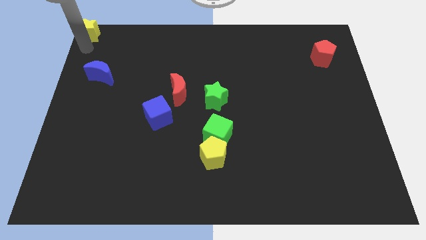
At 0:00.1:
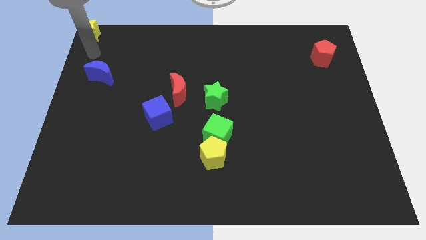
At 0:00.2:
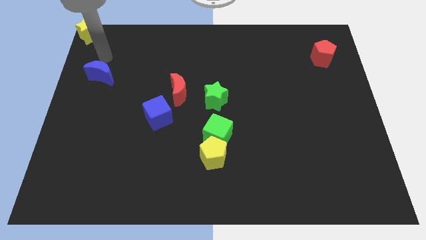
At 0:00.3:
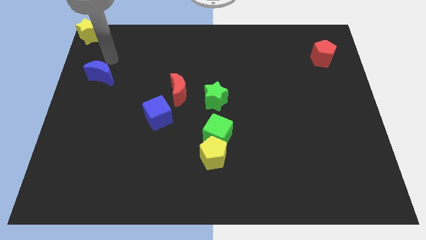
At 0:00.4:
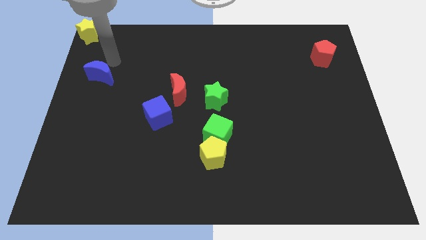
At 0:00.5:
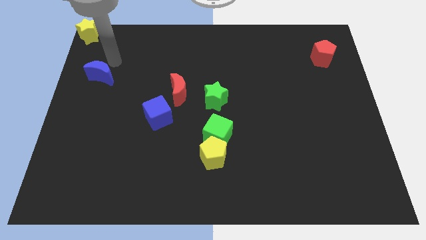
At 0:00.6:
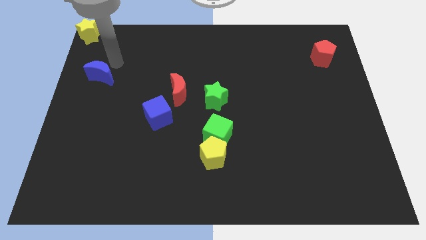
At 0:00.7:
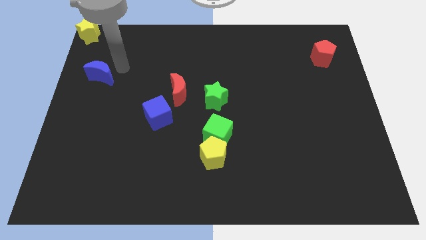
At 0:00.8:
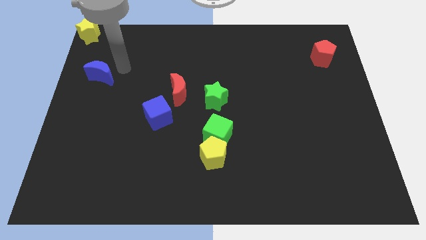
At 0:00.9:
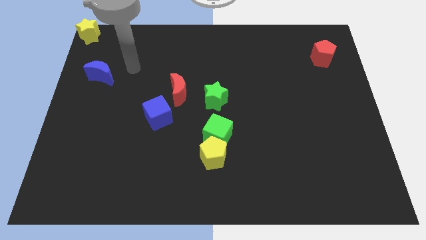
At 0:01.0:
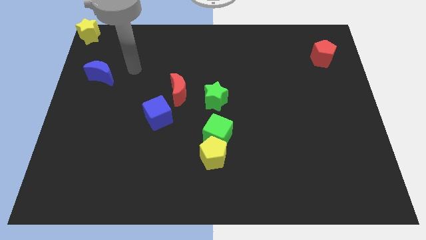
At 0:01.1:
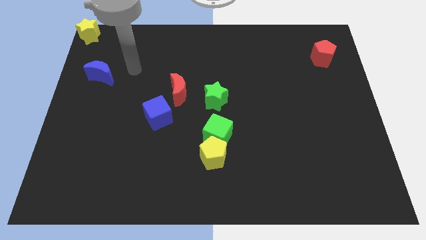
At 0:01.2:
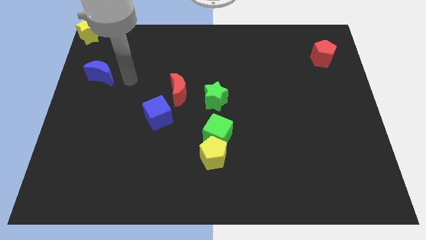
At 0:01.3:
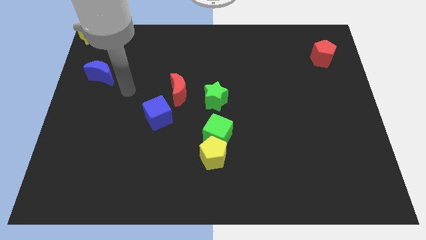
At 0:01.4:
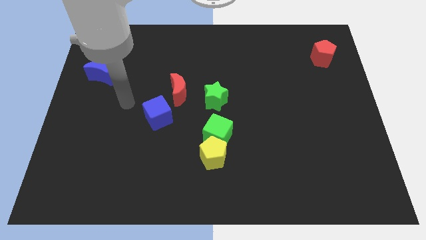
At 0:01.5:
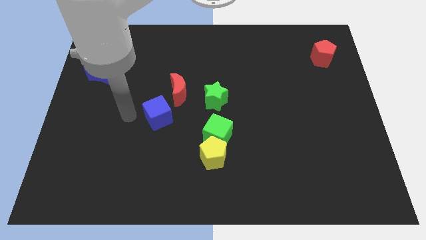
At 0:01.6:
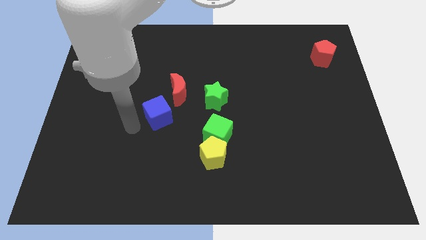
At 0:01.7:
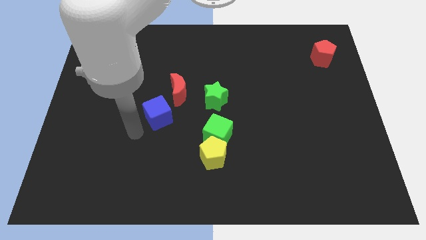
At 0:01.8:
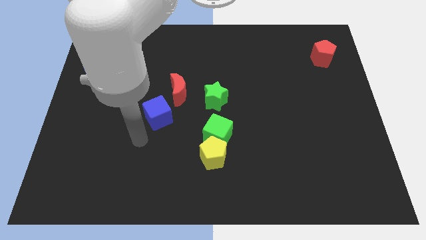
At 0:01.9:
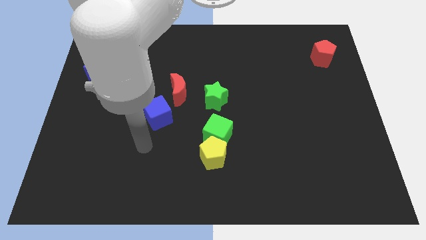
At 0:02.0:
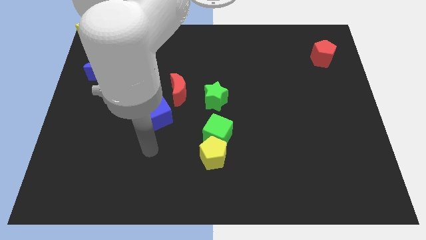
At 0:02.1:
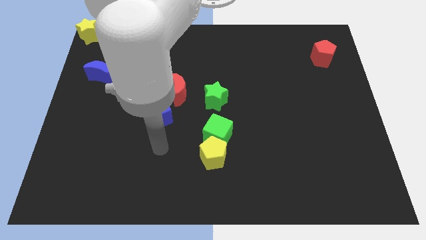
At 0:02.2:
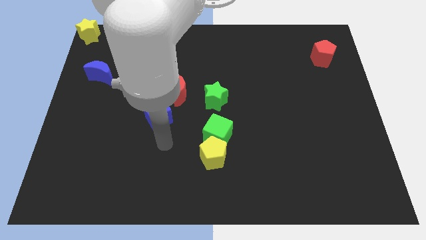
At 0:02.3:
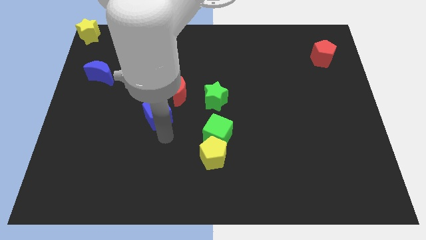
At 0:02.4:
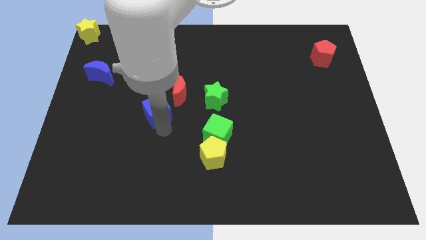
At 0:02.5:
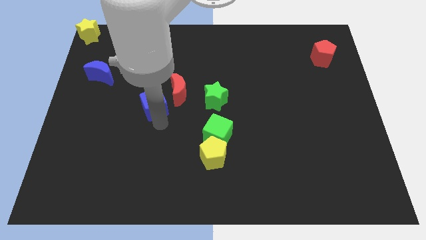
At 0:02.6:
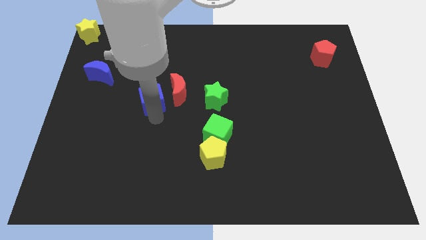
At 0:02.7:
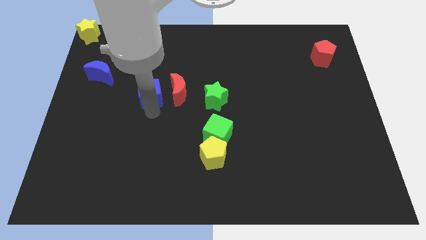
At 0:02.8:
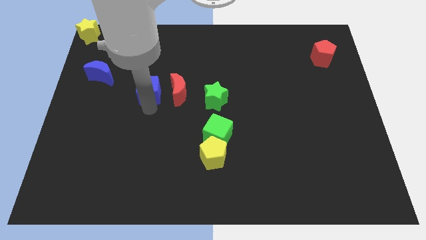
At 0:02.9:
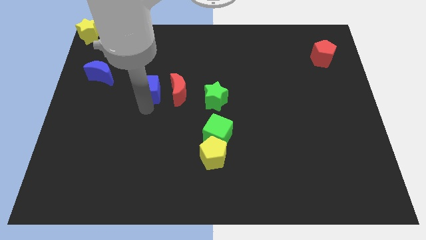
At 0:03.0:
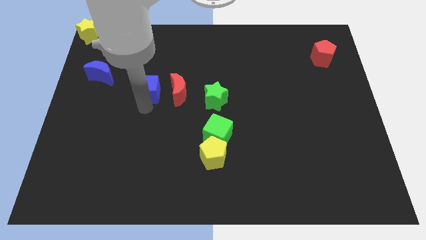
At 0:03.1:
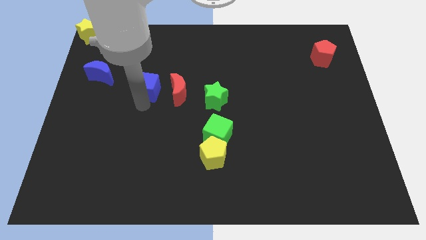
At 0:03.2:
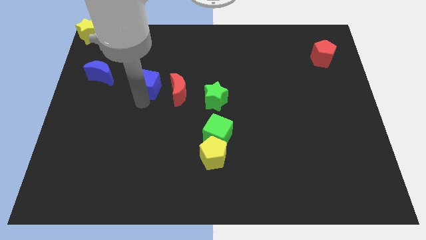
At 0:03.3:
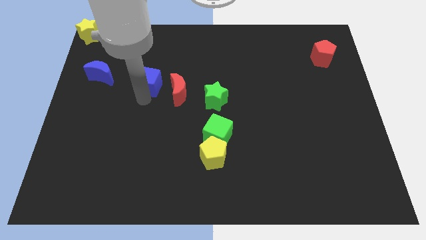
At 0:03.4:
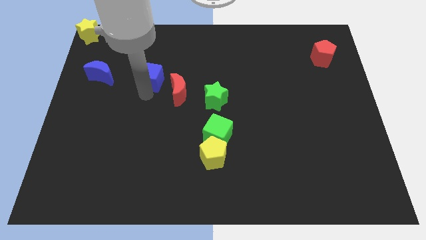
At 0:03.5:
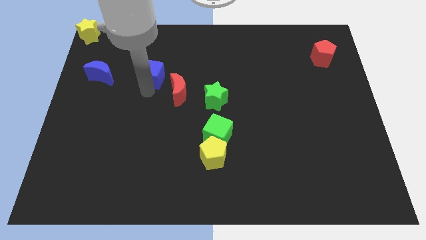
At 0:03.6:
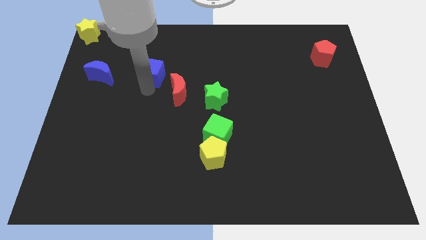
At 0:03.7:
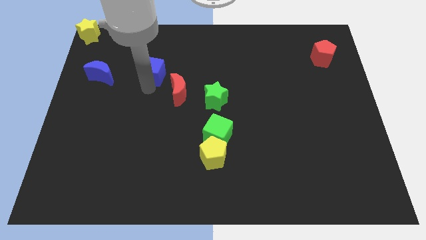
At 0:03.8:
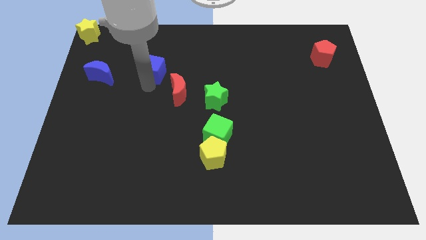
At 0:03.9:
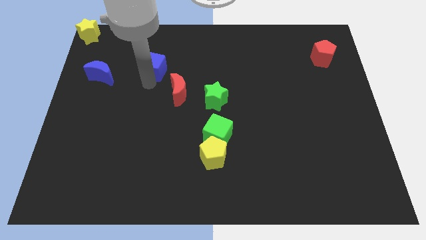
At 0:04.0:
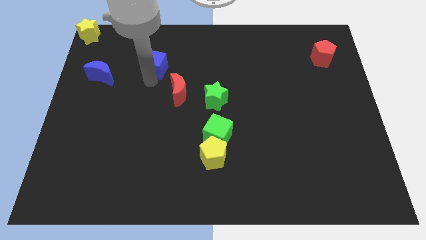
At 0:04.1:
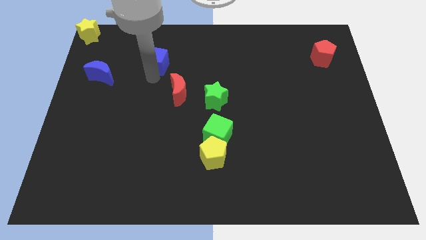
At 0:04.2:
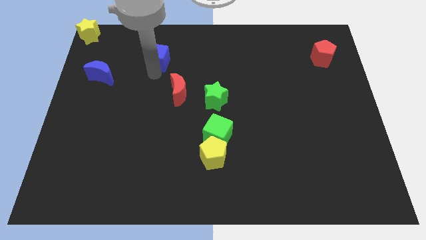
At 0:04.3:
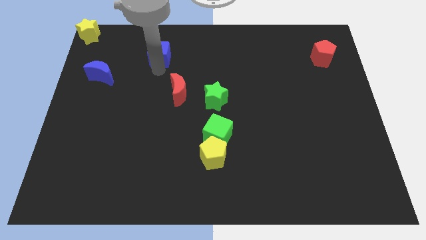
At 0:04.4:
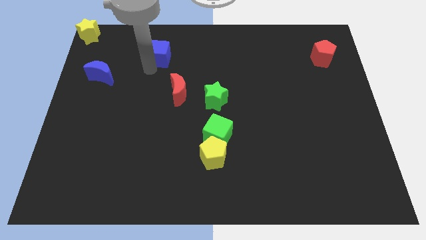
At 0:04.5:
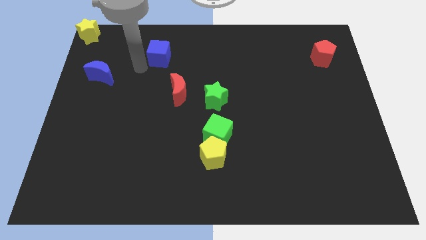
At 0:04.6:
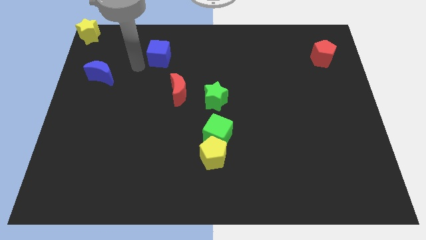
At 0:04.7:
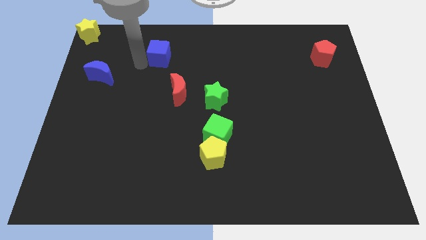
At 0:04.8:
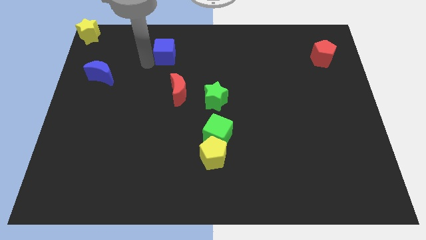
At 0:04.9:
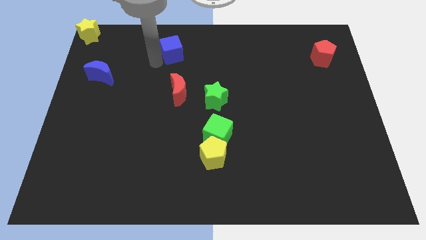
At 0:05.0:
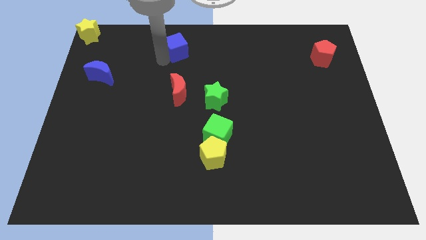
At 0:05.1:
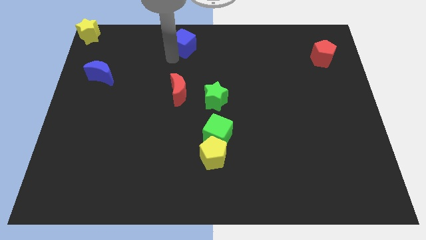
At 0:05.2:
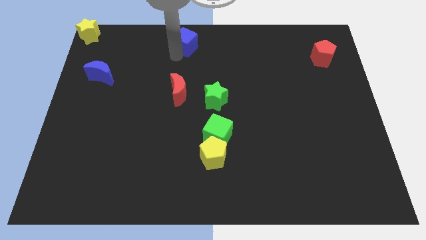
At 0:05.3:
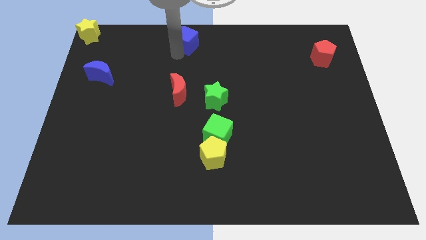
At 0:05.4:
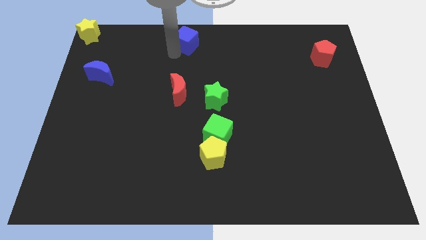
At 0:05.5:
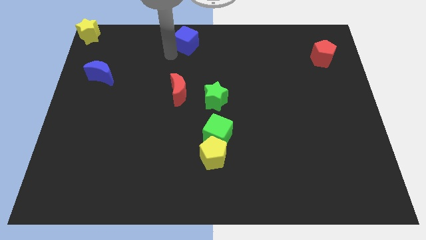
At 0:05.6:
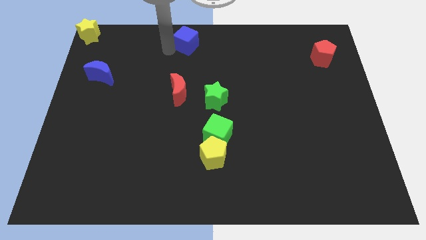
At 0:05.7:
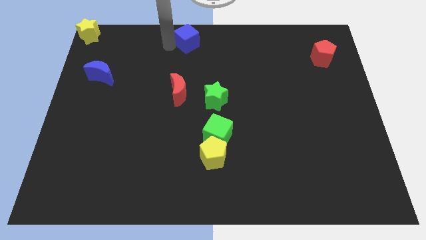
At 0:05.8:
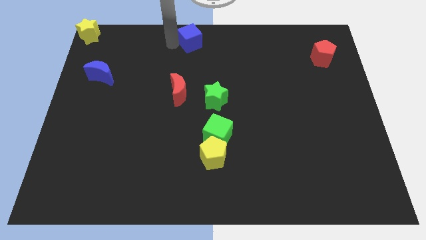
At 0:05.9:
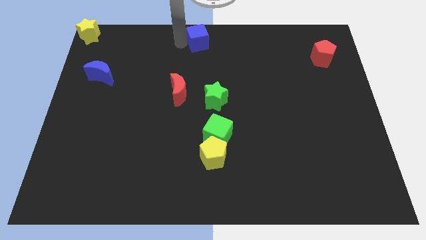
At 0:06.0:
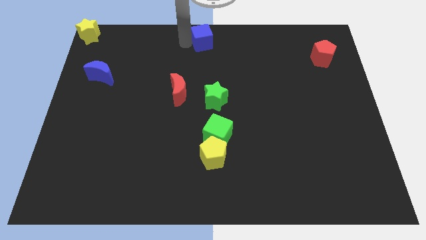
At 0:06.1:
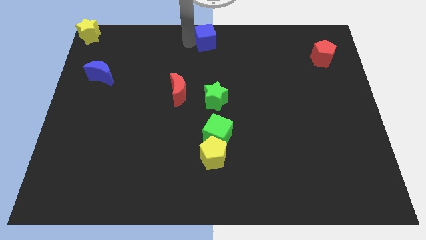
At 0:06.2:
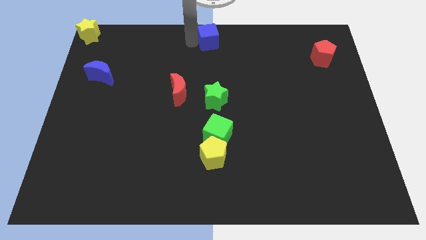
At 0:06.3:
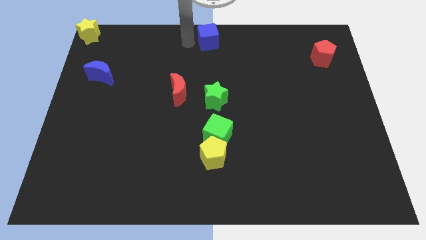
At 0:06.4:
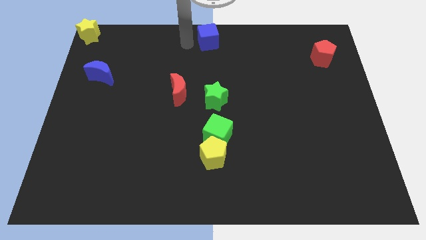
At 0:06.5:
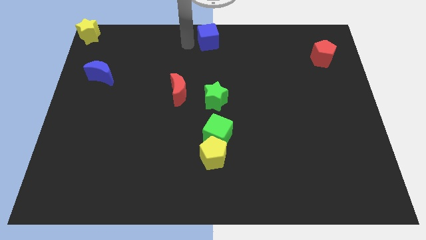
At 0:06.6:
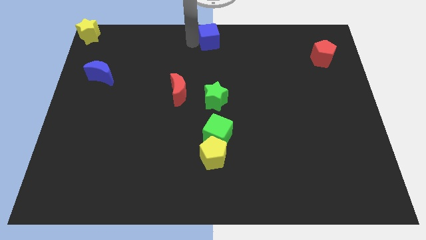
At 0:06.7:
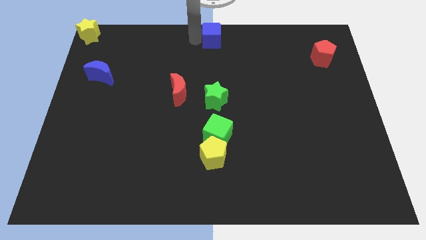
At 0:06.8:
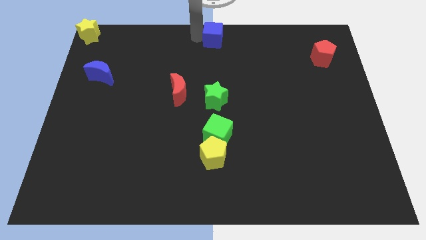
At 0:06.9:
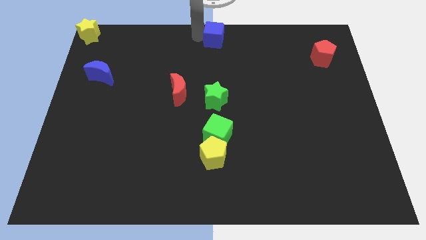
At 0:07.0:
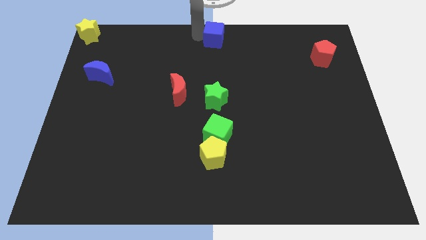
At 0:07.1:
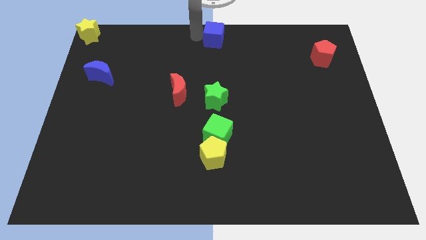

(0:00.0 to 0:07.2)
move the blue cube to the top center of the table

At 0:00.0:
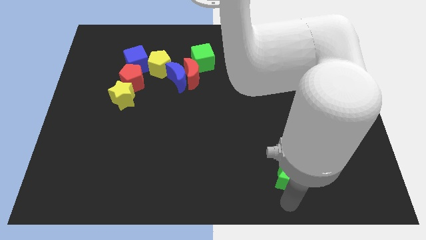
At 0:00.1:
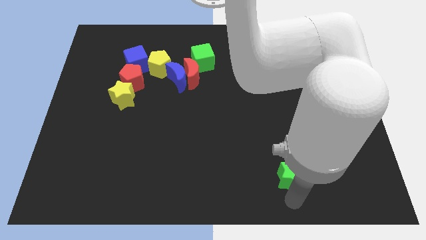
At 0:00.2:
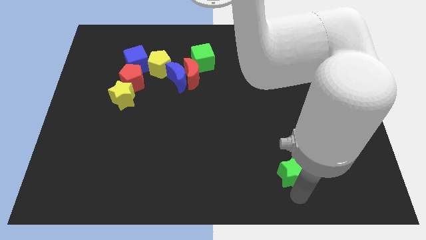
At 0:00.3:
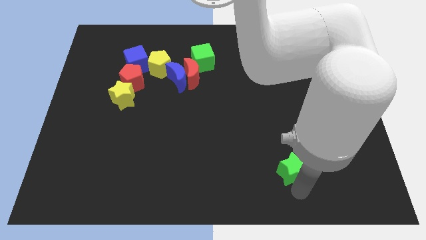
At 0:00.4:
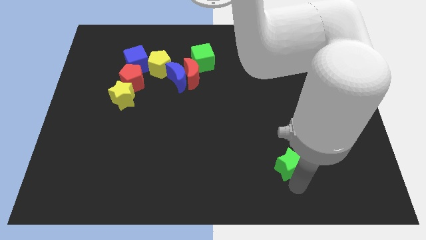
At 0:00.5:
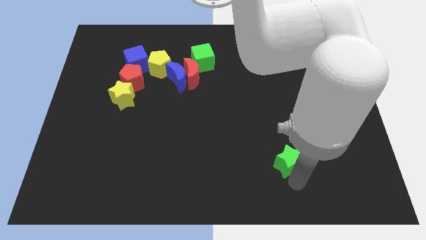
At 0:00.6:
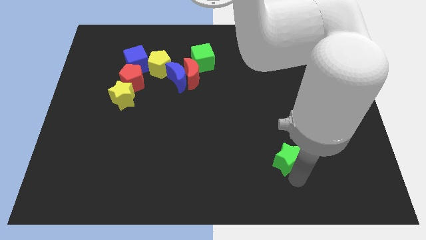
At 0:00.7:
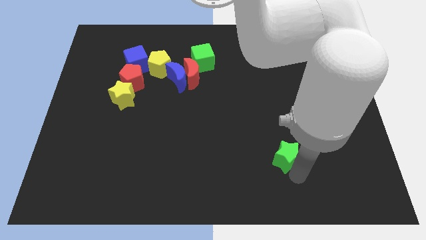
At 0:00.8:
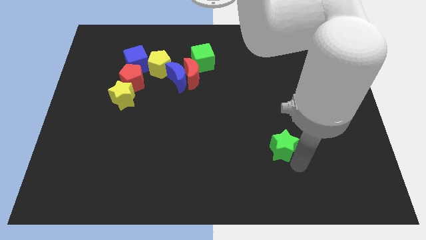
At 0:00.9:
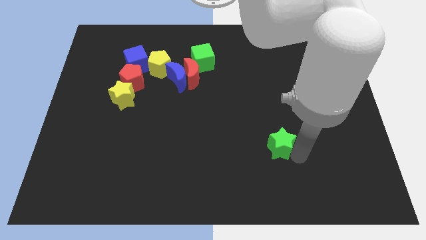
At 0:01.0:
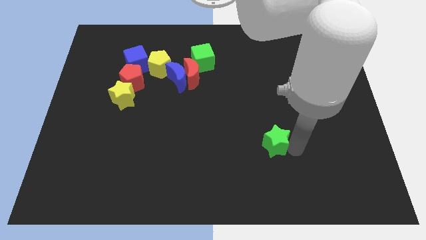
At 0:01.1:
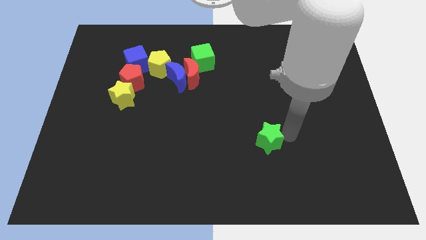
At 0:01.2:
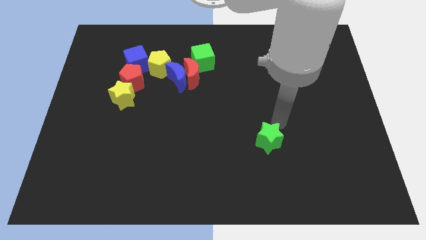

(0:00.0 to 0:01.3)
move the green star to the top of the board

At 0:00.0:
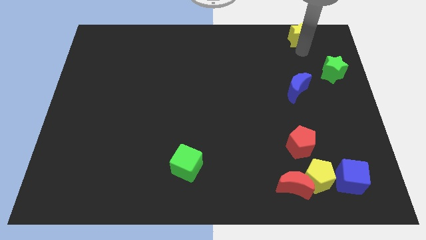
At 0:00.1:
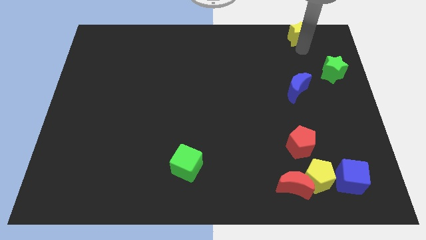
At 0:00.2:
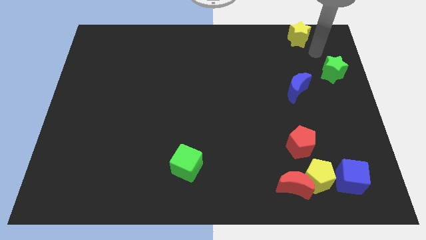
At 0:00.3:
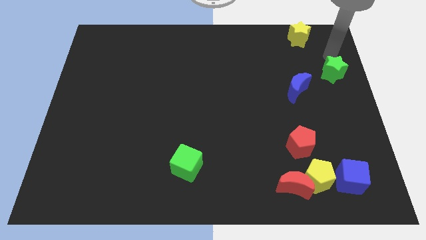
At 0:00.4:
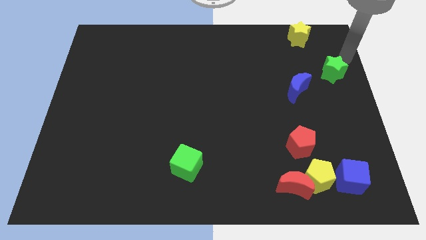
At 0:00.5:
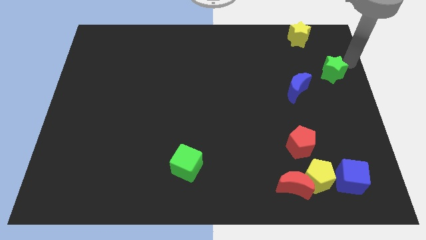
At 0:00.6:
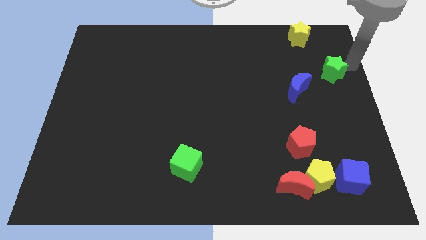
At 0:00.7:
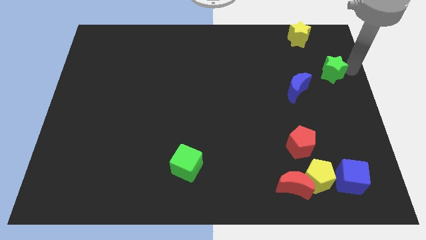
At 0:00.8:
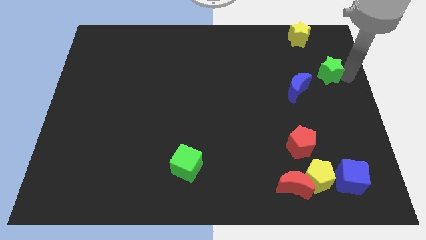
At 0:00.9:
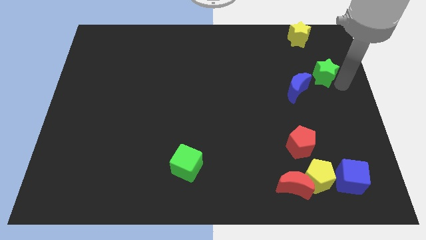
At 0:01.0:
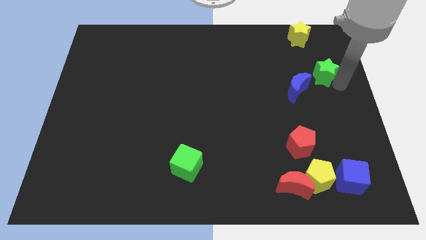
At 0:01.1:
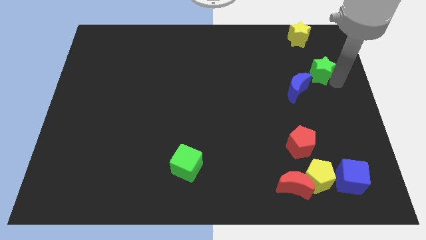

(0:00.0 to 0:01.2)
move arm near green star
